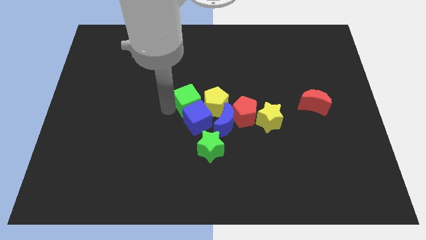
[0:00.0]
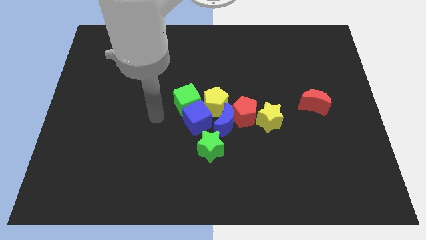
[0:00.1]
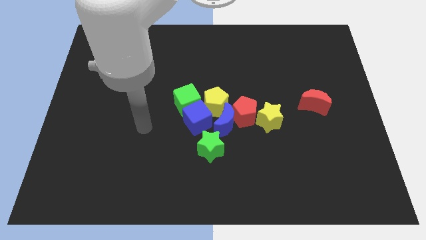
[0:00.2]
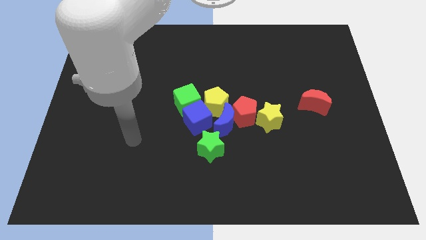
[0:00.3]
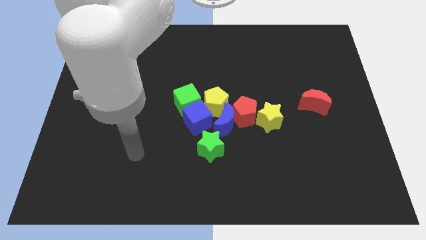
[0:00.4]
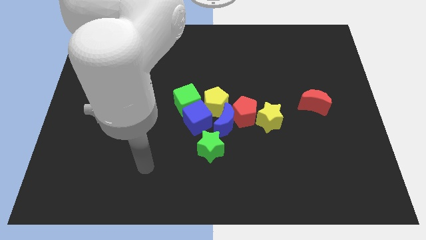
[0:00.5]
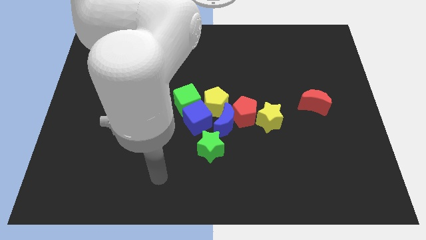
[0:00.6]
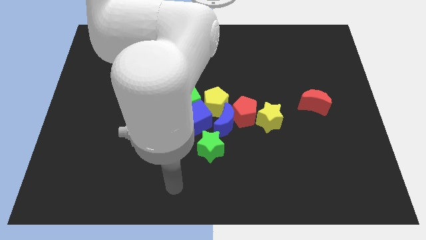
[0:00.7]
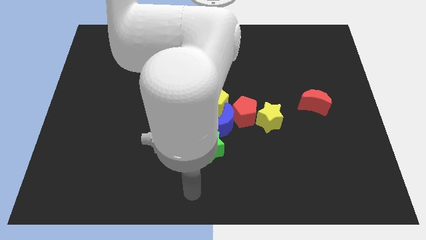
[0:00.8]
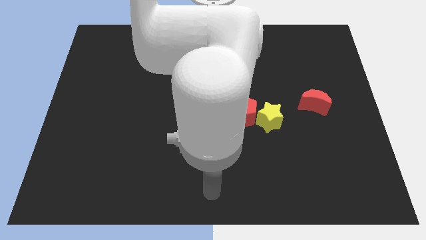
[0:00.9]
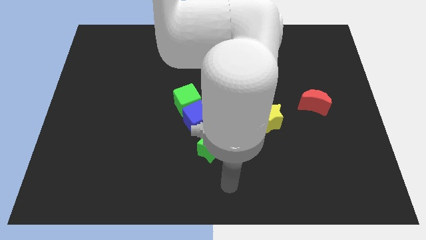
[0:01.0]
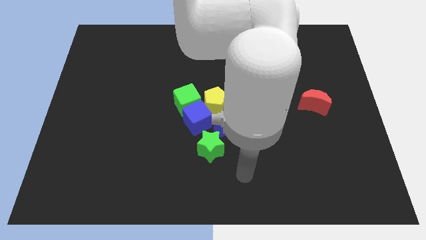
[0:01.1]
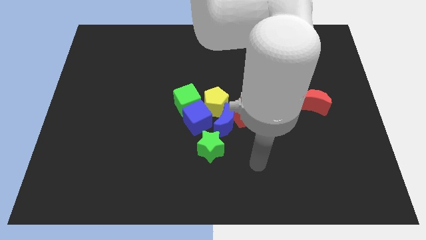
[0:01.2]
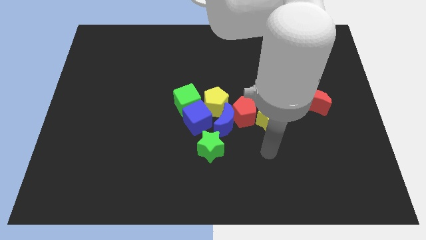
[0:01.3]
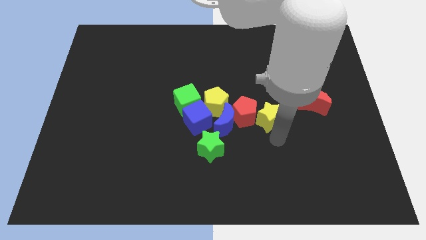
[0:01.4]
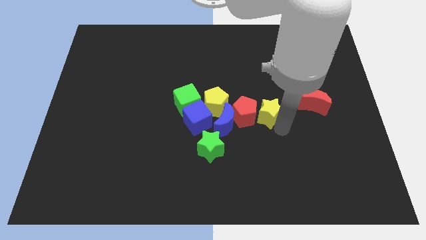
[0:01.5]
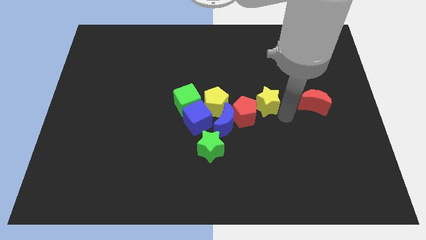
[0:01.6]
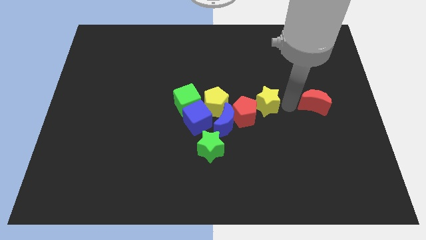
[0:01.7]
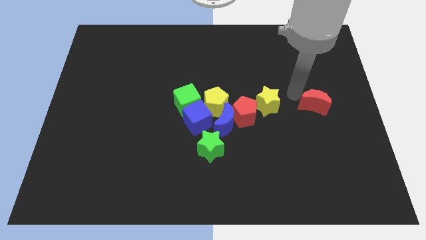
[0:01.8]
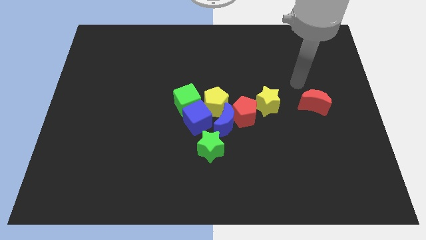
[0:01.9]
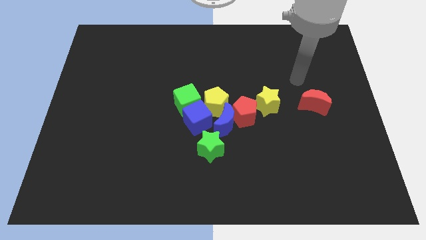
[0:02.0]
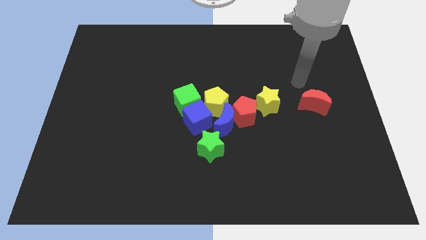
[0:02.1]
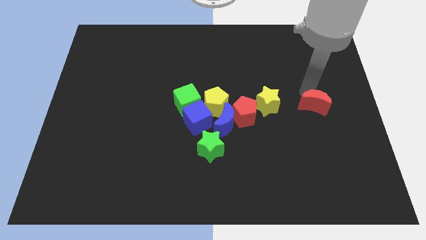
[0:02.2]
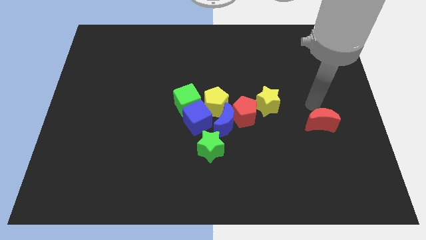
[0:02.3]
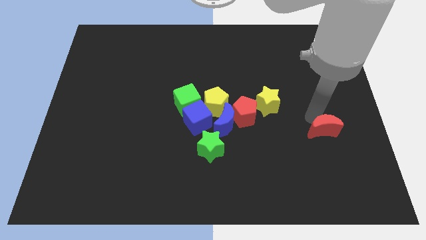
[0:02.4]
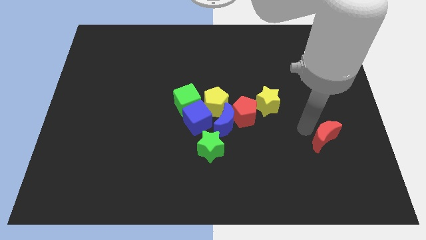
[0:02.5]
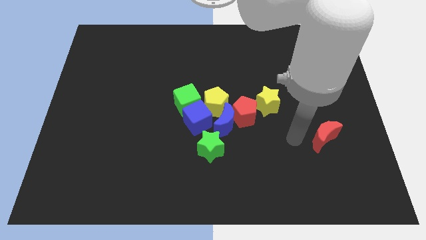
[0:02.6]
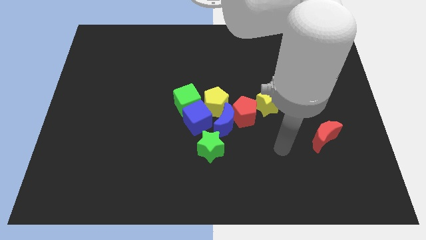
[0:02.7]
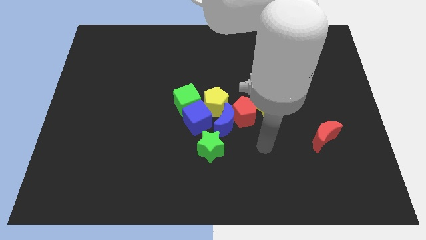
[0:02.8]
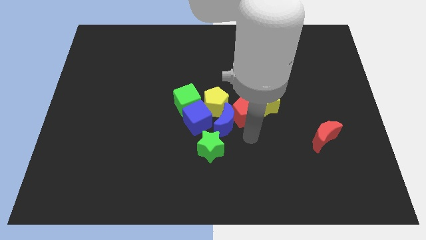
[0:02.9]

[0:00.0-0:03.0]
move the red crescent slightly to the bottom

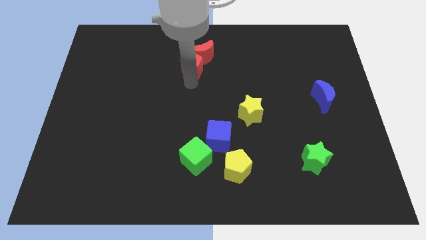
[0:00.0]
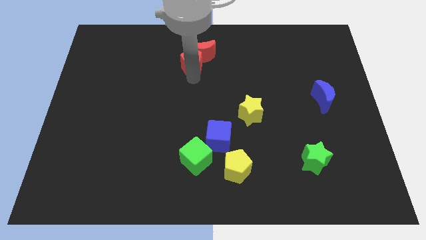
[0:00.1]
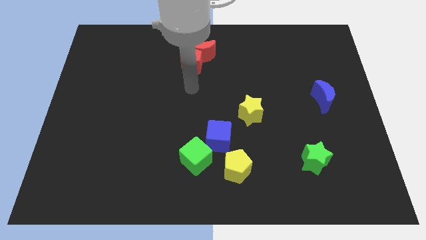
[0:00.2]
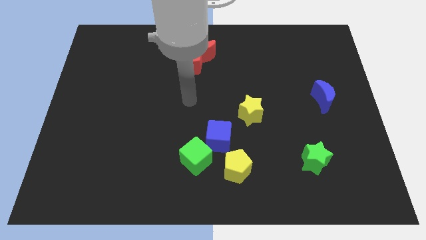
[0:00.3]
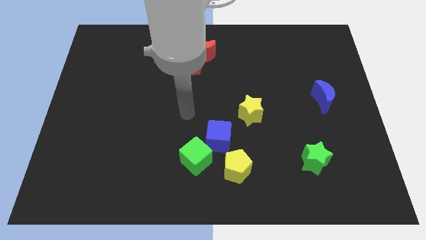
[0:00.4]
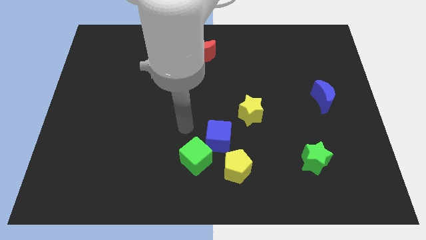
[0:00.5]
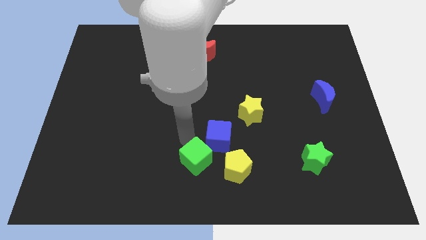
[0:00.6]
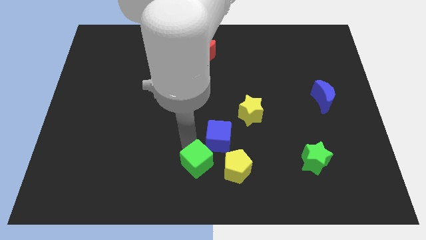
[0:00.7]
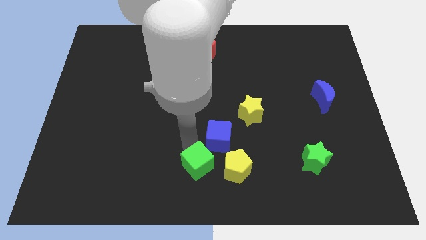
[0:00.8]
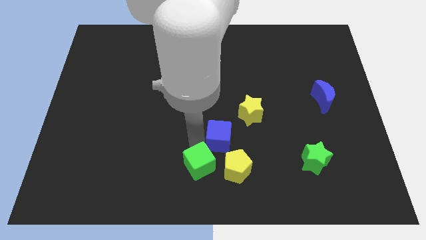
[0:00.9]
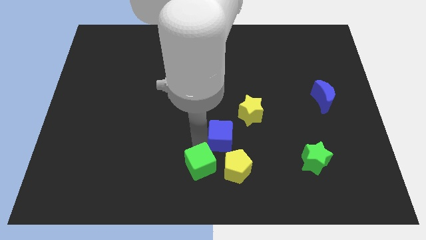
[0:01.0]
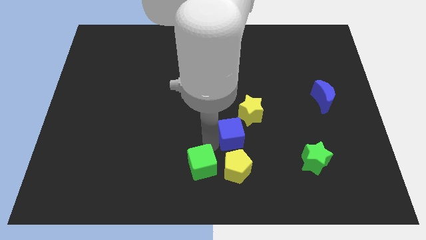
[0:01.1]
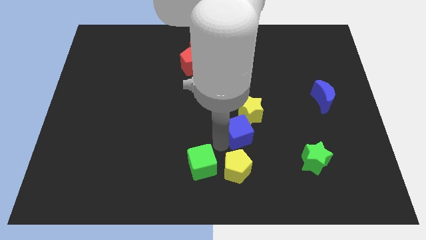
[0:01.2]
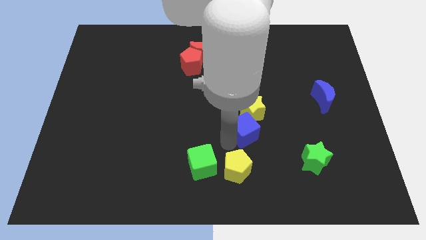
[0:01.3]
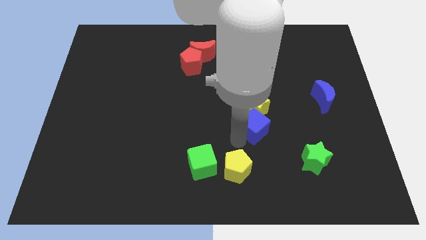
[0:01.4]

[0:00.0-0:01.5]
move the blue cube away from the green cube

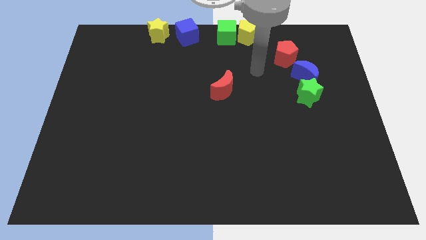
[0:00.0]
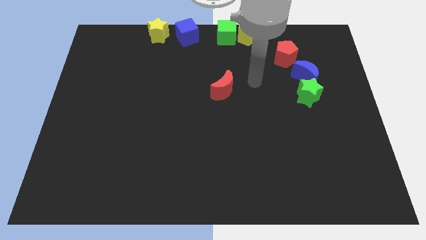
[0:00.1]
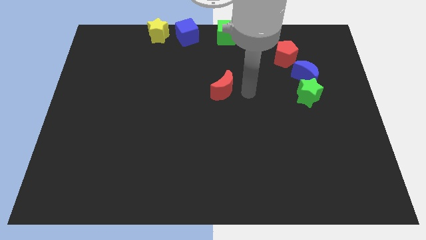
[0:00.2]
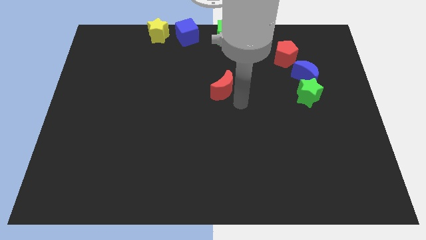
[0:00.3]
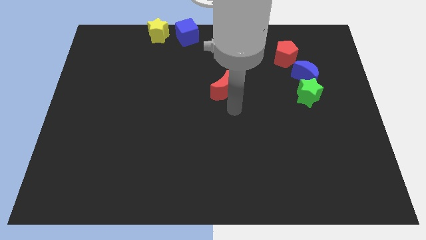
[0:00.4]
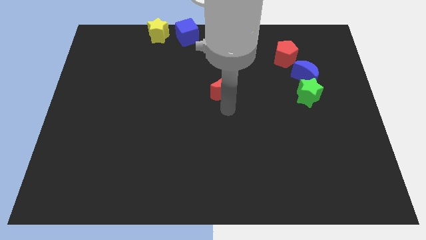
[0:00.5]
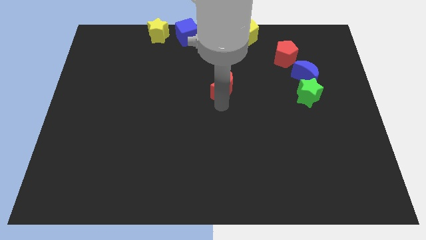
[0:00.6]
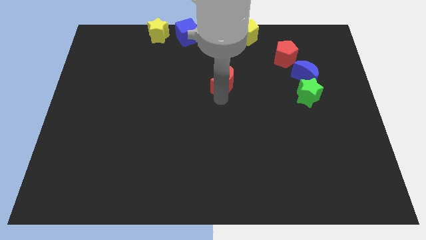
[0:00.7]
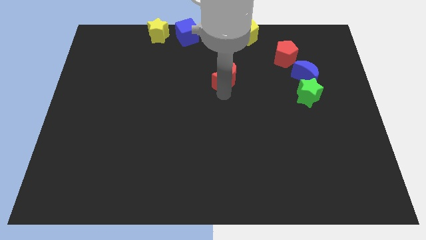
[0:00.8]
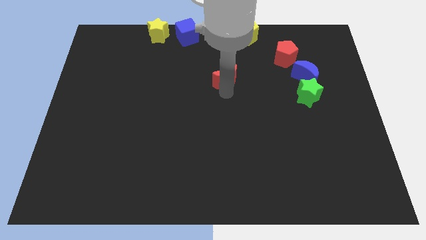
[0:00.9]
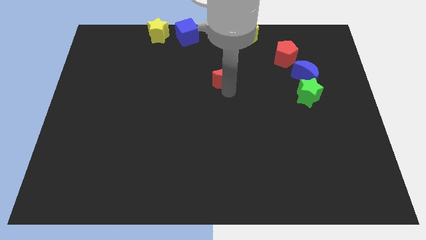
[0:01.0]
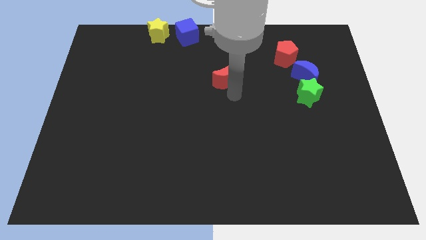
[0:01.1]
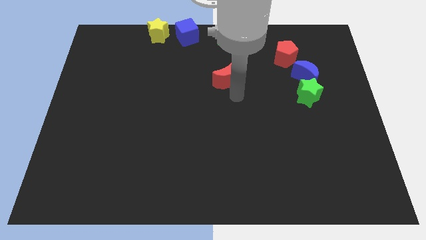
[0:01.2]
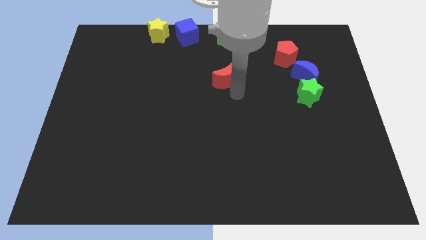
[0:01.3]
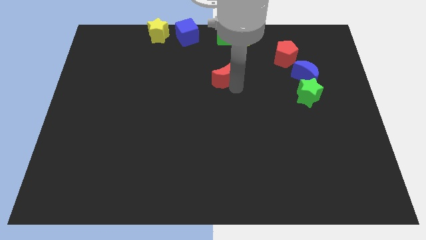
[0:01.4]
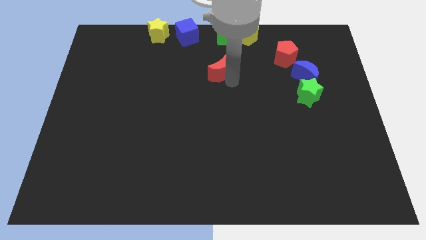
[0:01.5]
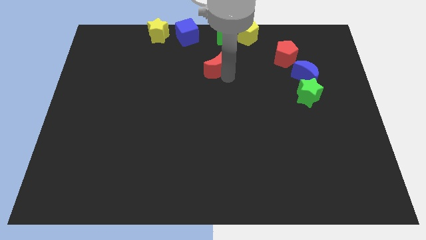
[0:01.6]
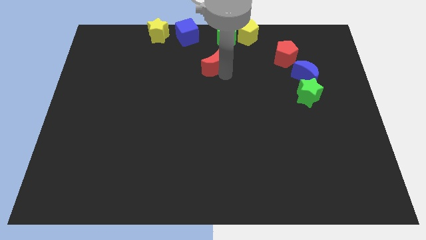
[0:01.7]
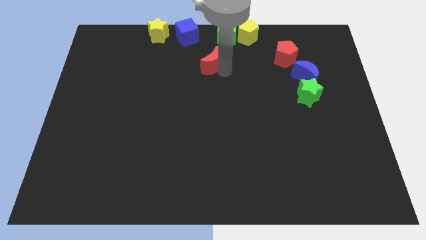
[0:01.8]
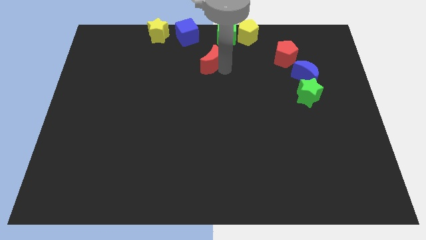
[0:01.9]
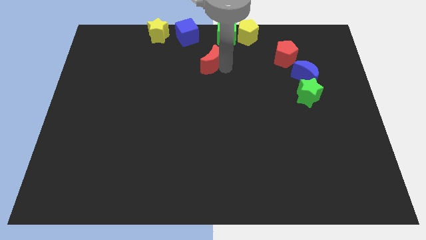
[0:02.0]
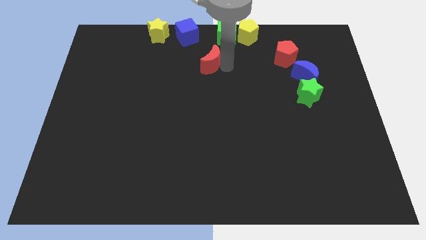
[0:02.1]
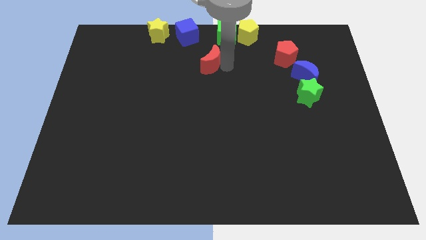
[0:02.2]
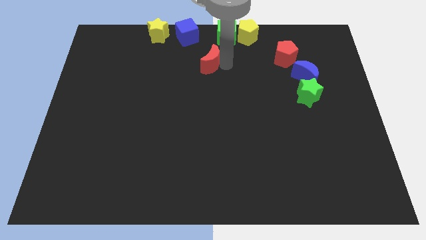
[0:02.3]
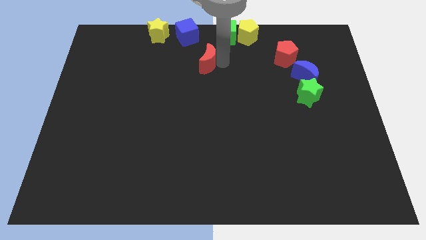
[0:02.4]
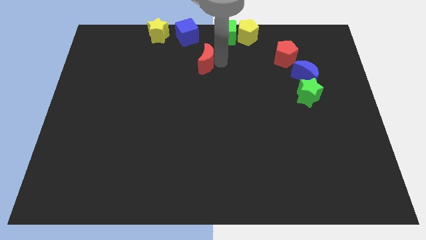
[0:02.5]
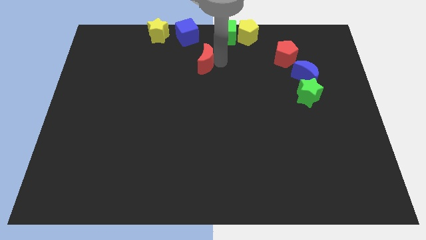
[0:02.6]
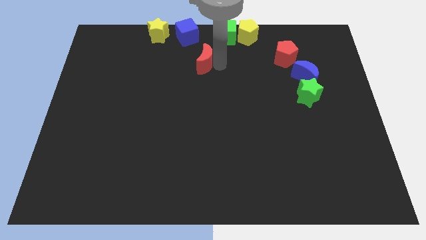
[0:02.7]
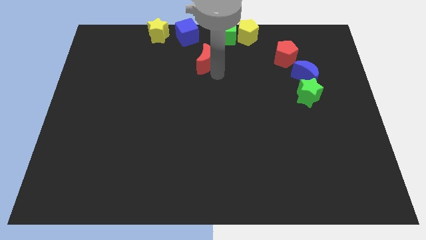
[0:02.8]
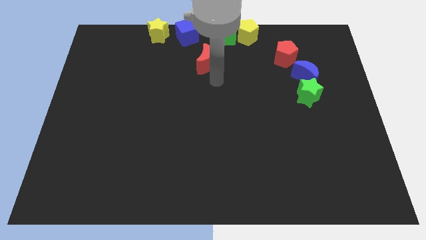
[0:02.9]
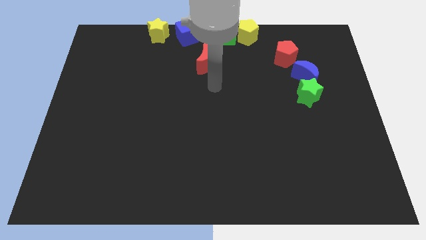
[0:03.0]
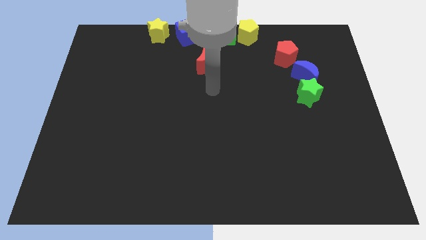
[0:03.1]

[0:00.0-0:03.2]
move the red moon to the bottom right side of the blue cube

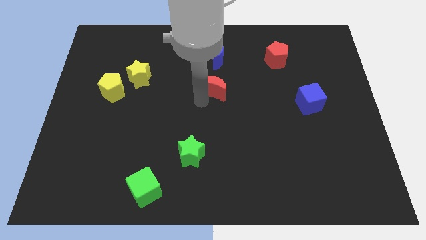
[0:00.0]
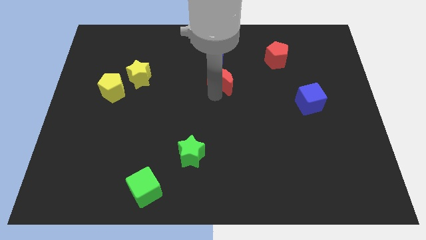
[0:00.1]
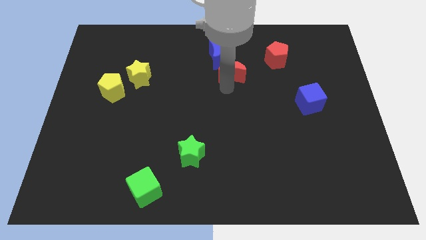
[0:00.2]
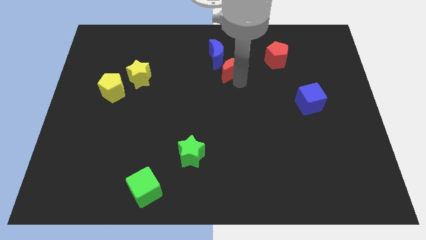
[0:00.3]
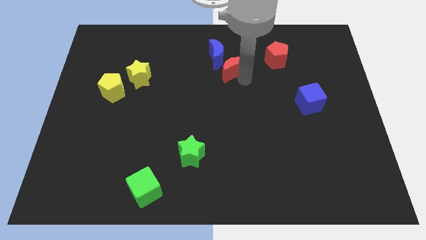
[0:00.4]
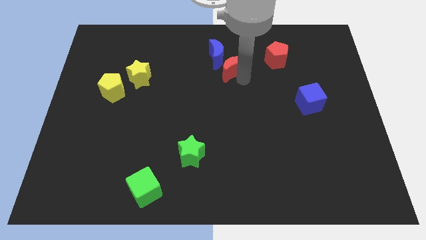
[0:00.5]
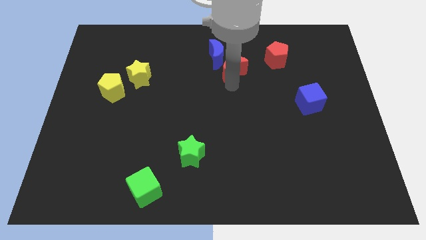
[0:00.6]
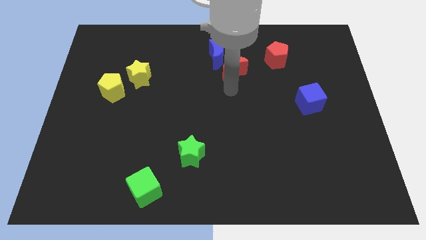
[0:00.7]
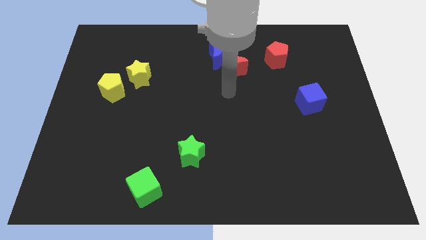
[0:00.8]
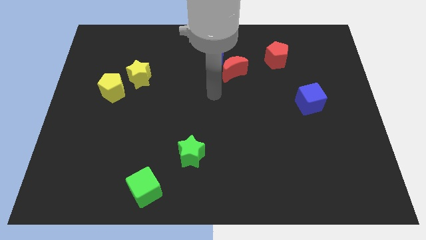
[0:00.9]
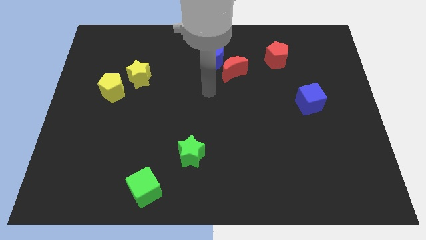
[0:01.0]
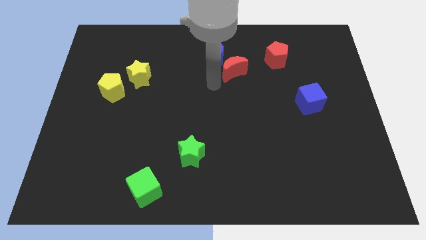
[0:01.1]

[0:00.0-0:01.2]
push the red crescent close to the blue crescent

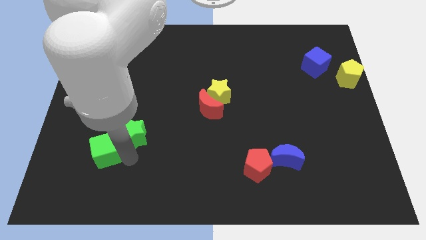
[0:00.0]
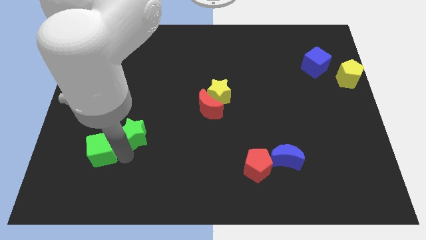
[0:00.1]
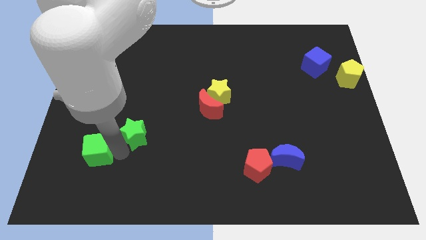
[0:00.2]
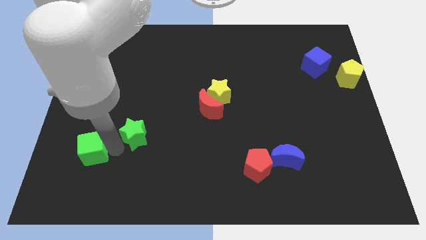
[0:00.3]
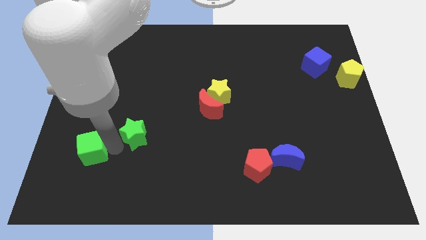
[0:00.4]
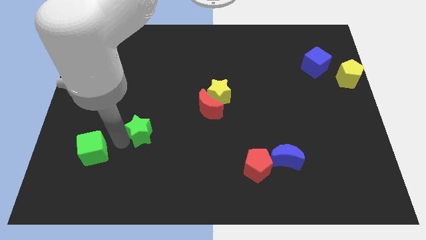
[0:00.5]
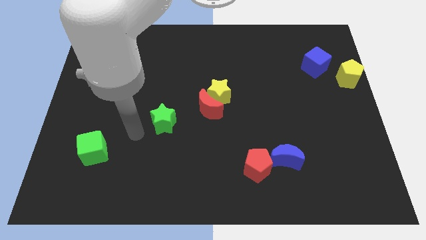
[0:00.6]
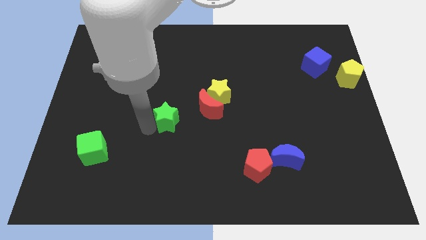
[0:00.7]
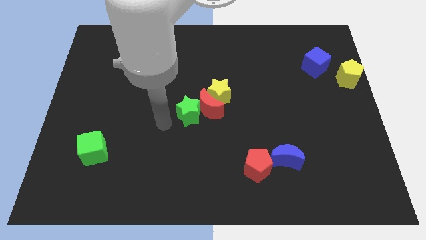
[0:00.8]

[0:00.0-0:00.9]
separate the green star from the green cube
